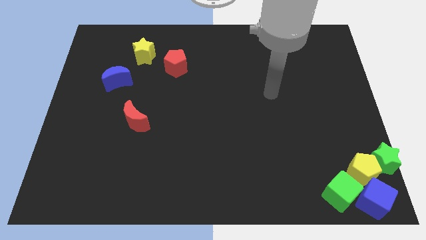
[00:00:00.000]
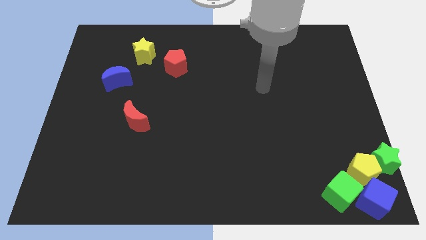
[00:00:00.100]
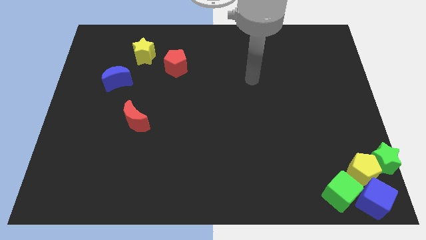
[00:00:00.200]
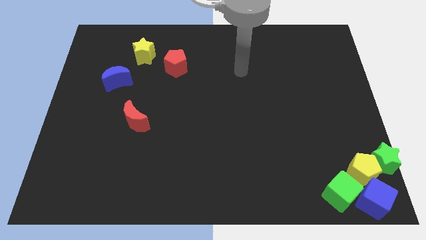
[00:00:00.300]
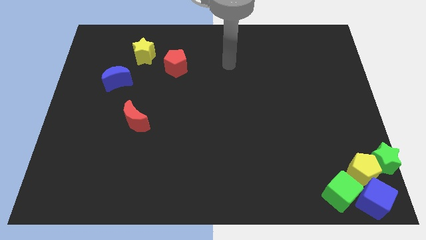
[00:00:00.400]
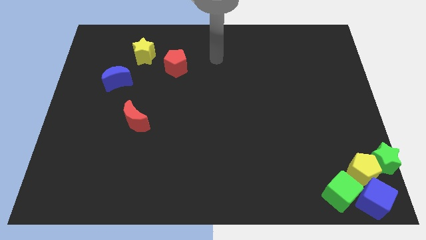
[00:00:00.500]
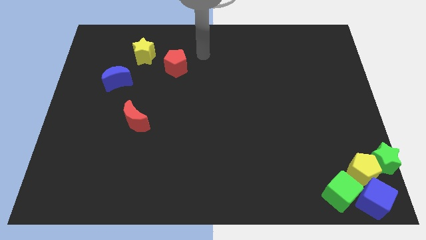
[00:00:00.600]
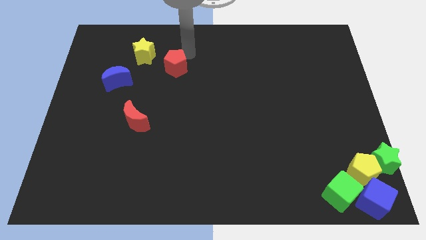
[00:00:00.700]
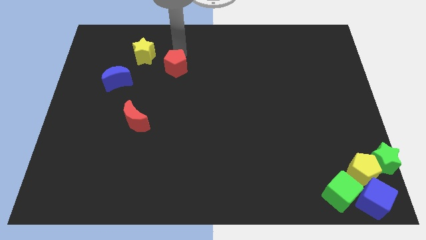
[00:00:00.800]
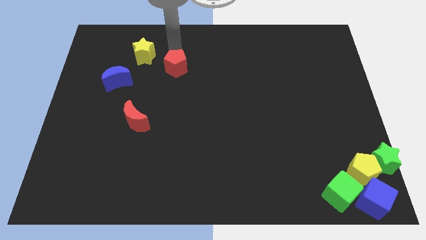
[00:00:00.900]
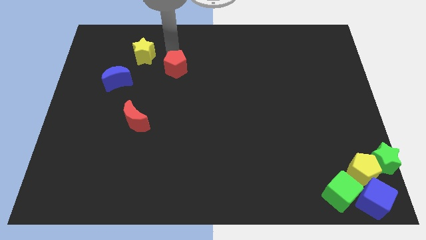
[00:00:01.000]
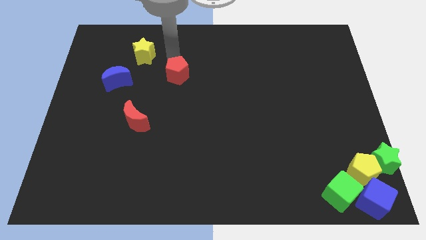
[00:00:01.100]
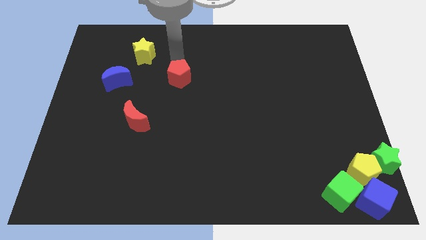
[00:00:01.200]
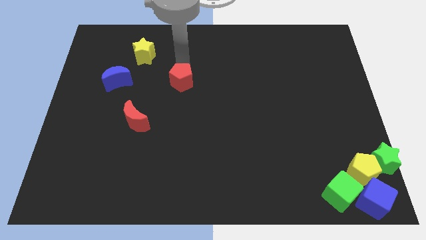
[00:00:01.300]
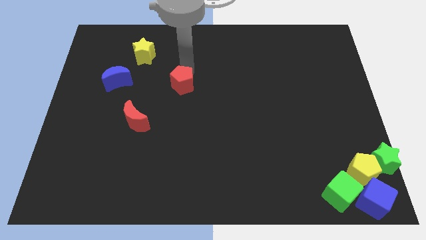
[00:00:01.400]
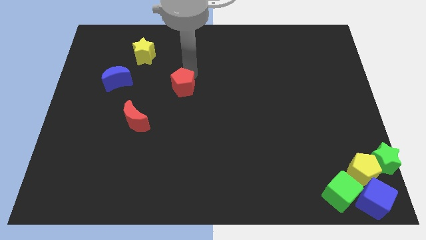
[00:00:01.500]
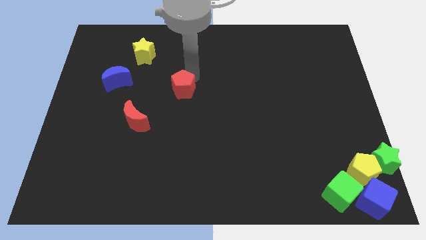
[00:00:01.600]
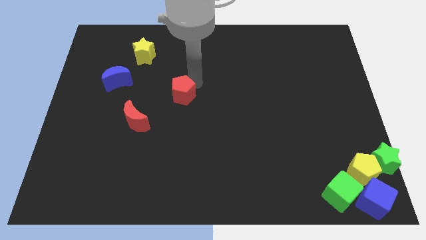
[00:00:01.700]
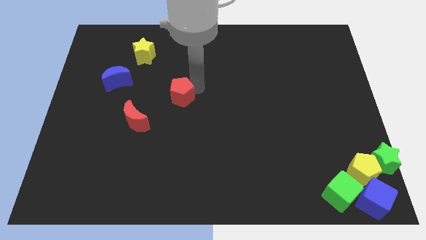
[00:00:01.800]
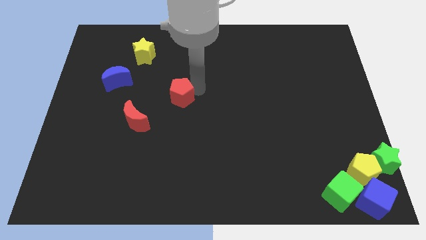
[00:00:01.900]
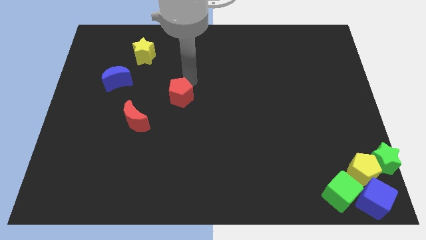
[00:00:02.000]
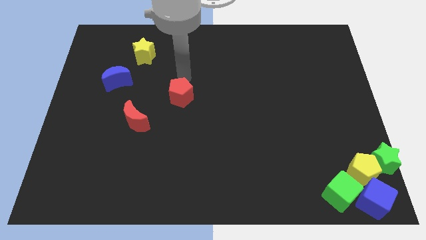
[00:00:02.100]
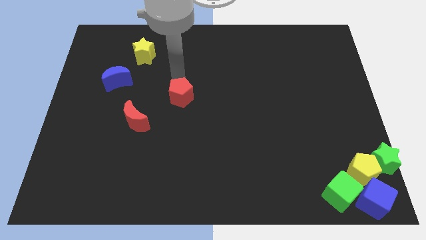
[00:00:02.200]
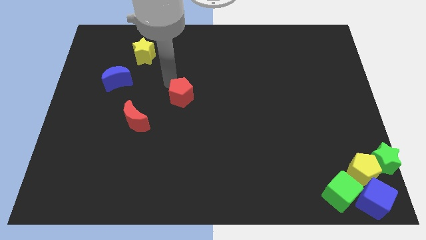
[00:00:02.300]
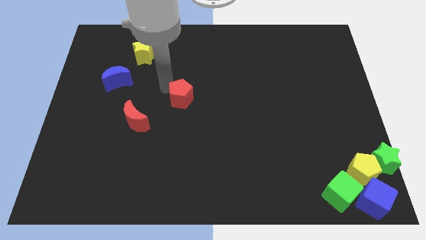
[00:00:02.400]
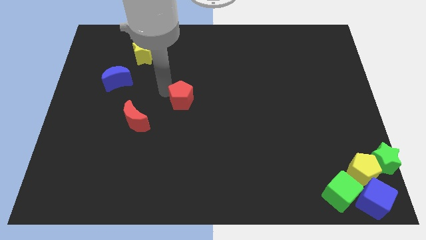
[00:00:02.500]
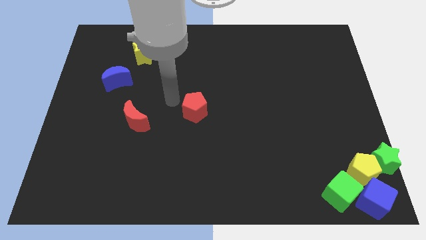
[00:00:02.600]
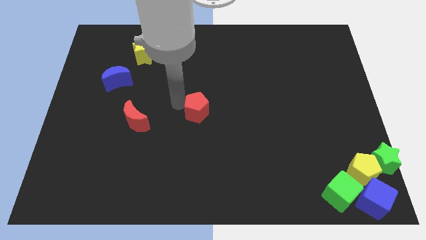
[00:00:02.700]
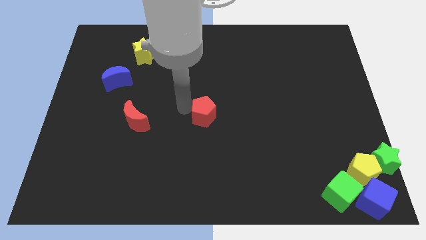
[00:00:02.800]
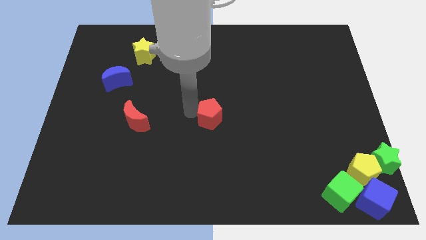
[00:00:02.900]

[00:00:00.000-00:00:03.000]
move the red pentagon to the horizontal right side of the red moon

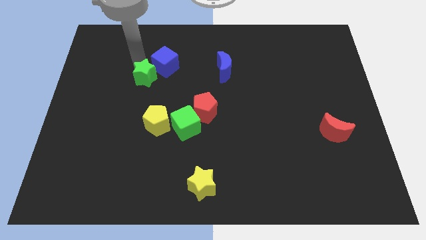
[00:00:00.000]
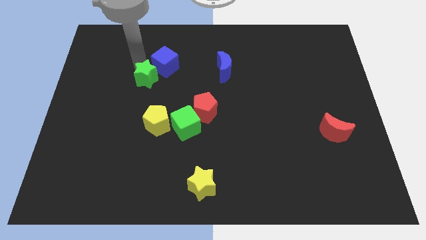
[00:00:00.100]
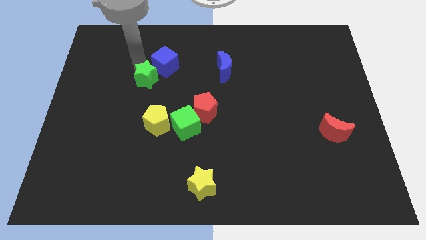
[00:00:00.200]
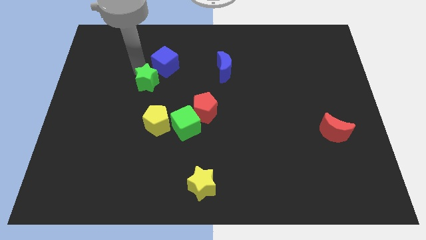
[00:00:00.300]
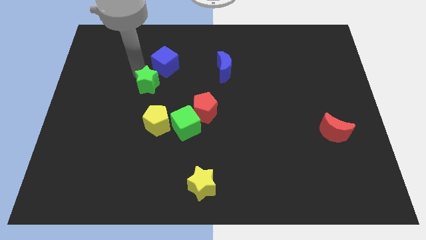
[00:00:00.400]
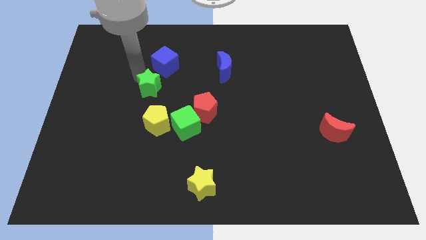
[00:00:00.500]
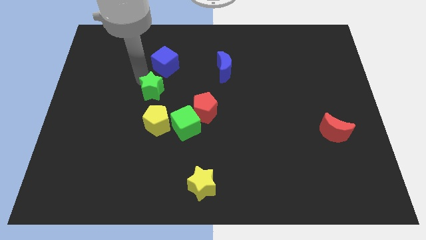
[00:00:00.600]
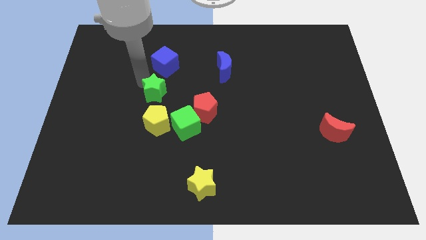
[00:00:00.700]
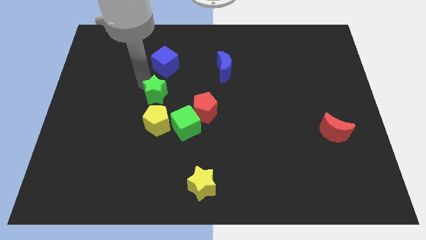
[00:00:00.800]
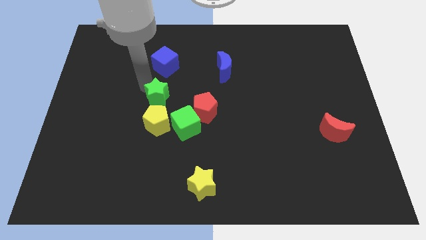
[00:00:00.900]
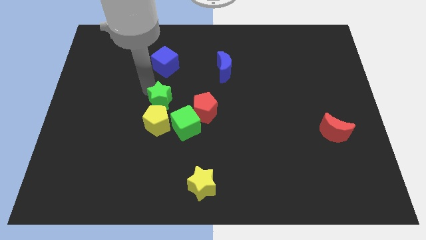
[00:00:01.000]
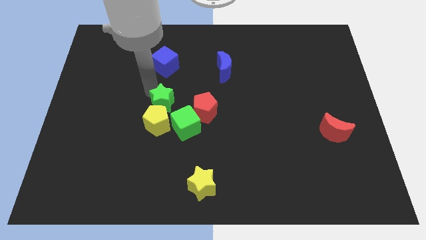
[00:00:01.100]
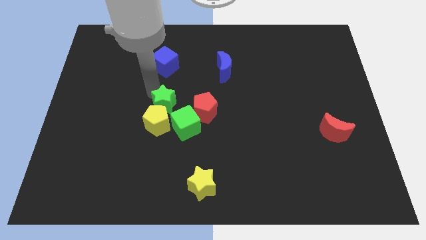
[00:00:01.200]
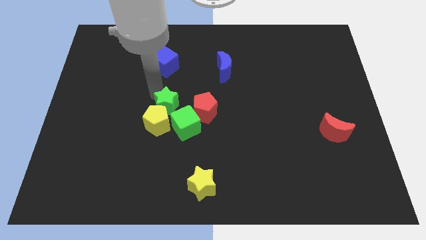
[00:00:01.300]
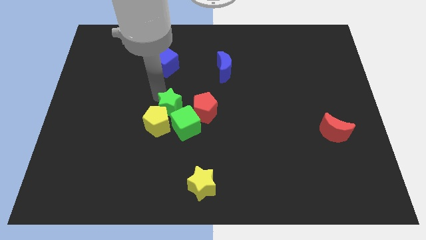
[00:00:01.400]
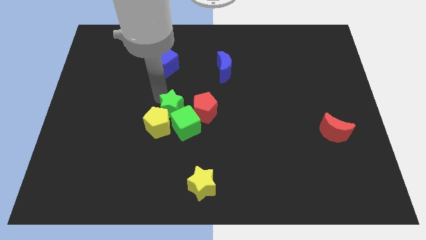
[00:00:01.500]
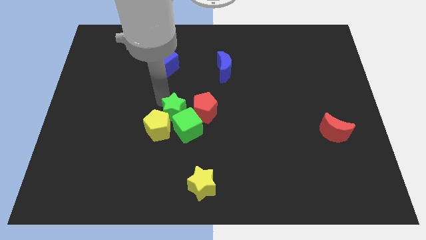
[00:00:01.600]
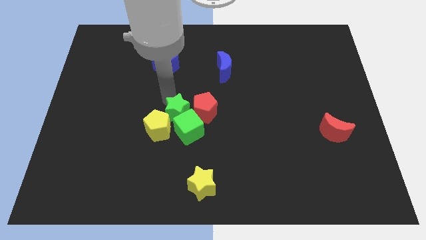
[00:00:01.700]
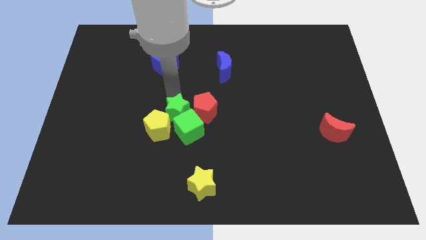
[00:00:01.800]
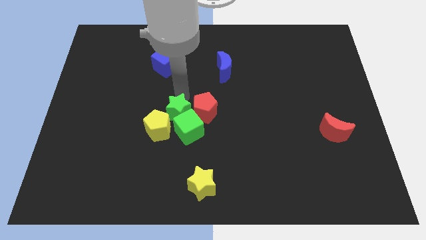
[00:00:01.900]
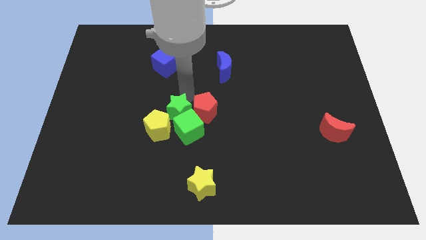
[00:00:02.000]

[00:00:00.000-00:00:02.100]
slide green star into green cube

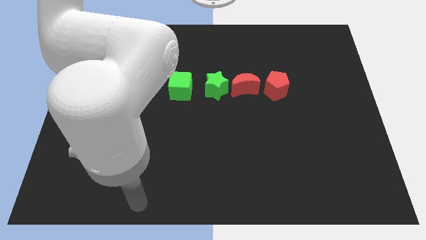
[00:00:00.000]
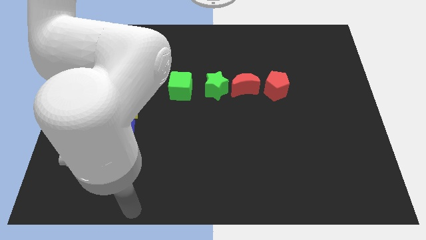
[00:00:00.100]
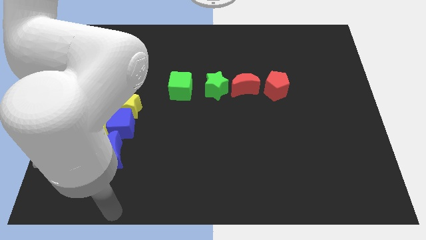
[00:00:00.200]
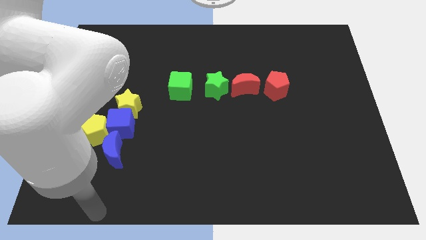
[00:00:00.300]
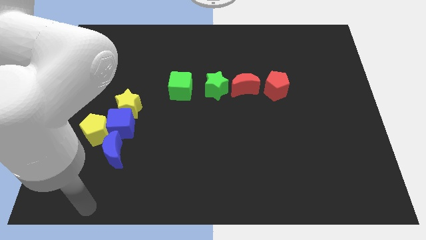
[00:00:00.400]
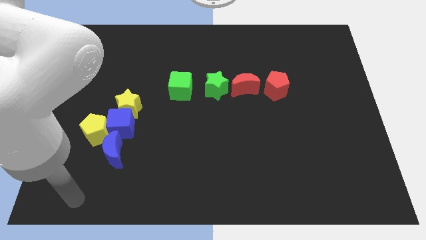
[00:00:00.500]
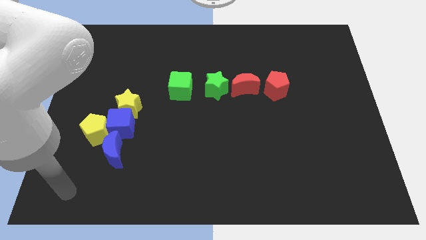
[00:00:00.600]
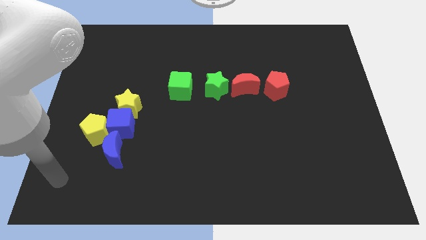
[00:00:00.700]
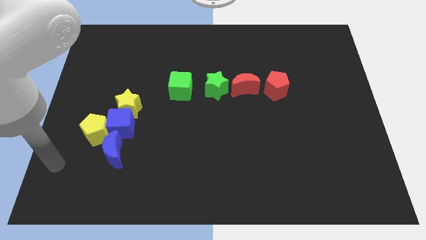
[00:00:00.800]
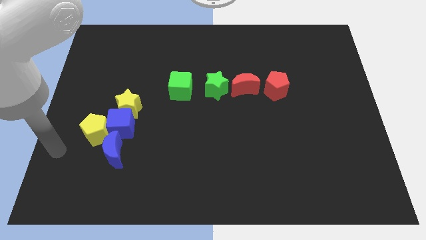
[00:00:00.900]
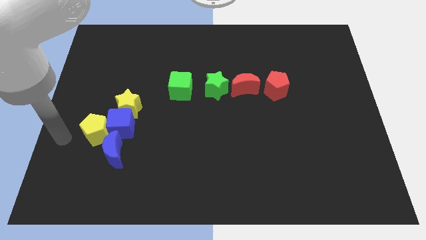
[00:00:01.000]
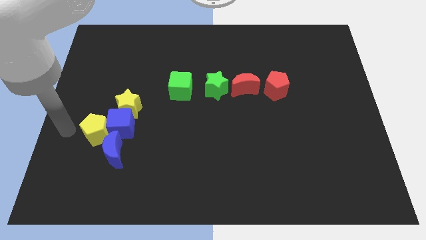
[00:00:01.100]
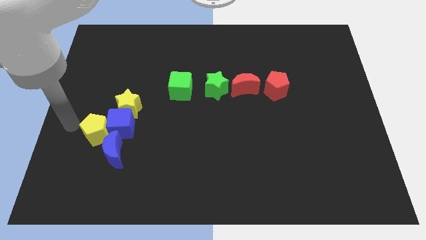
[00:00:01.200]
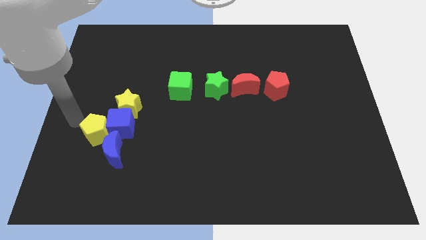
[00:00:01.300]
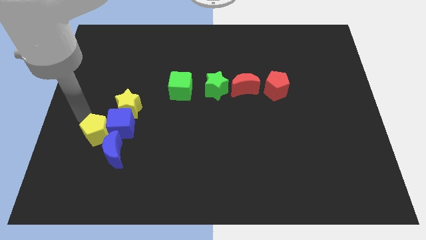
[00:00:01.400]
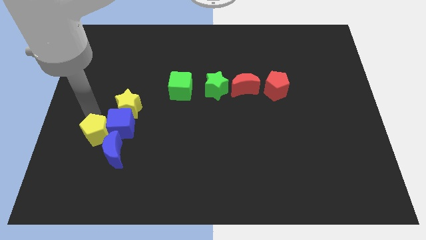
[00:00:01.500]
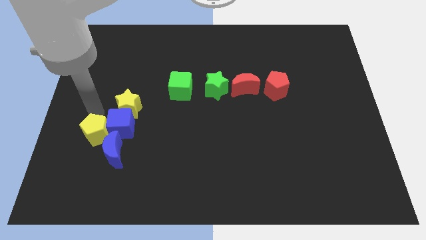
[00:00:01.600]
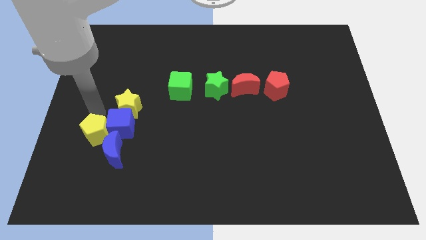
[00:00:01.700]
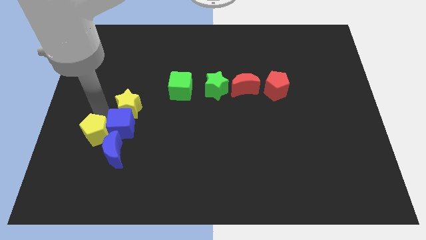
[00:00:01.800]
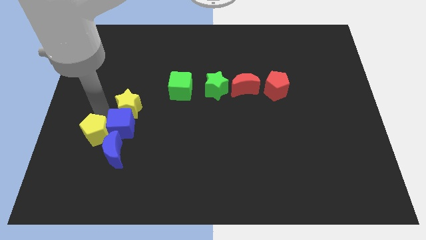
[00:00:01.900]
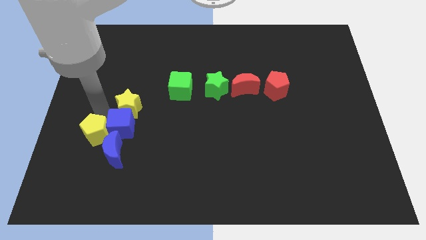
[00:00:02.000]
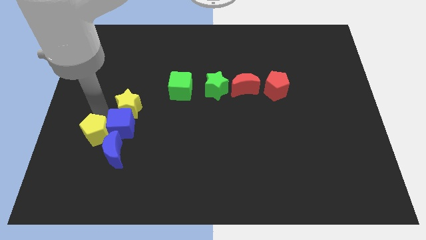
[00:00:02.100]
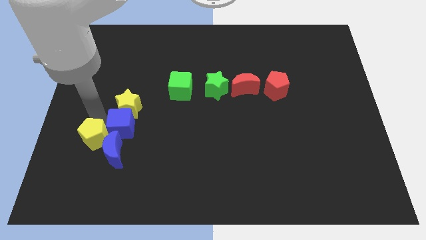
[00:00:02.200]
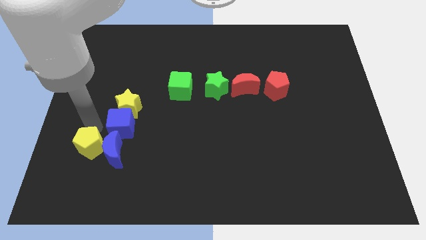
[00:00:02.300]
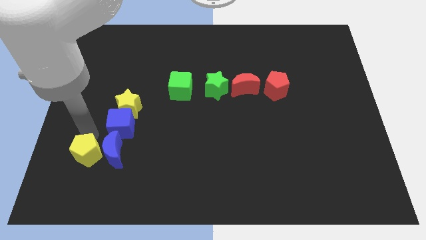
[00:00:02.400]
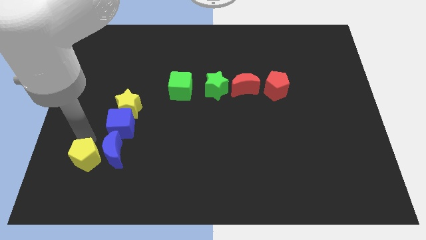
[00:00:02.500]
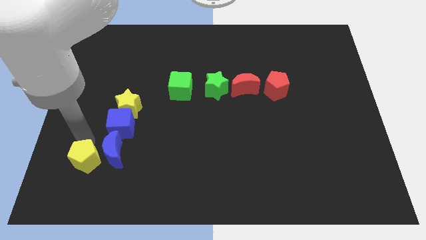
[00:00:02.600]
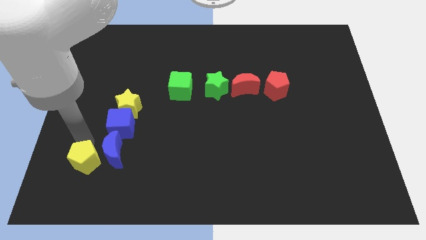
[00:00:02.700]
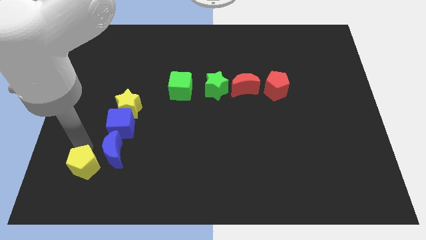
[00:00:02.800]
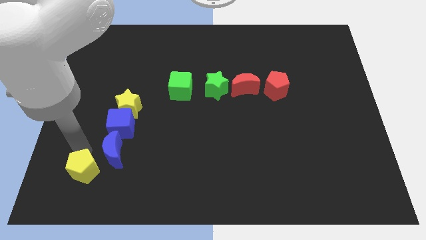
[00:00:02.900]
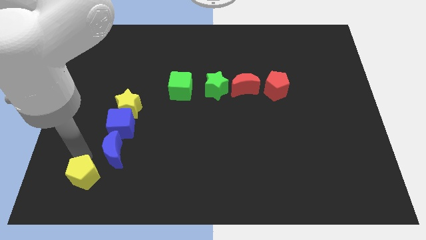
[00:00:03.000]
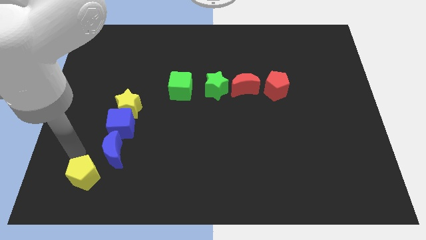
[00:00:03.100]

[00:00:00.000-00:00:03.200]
move the yellow pentagon away from the blue cube

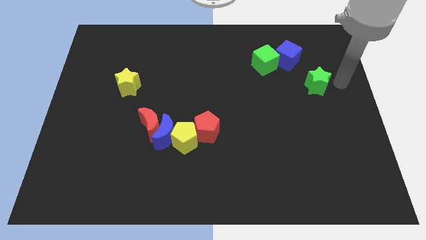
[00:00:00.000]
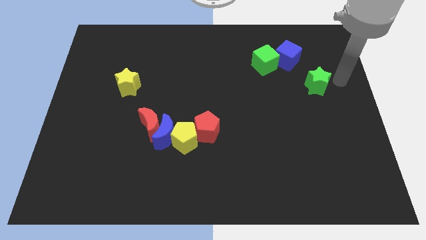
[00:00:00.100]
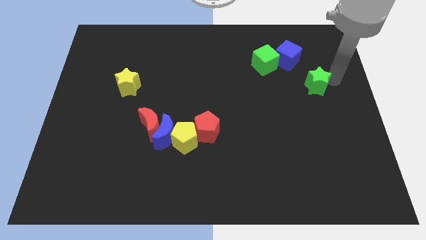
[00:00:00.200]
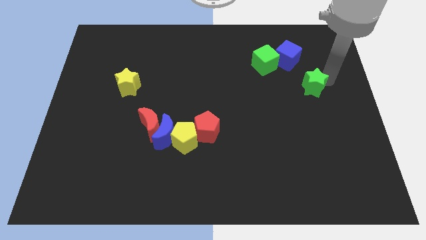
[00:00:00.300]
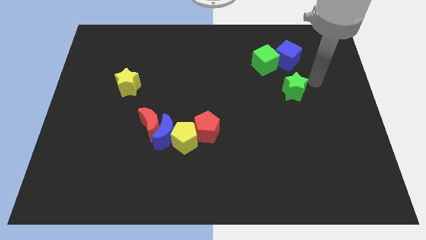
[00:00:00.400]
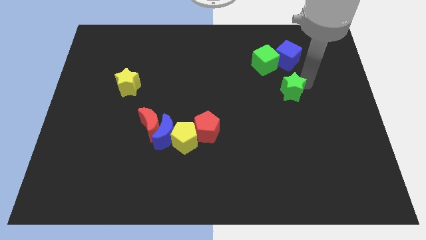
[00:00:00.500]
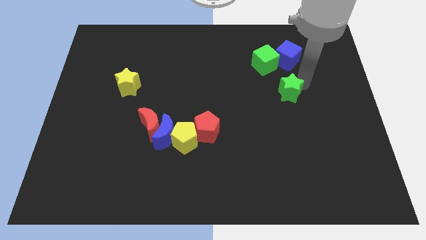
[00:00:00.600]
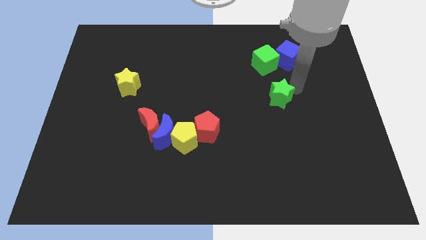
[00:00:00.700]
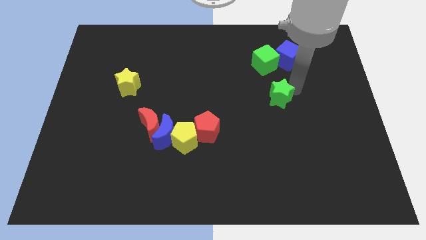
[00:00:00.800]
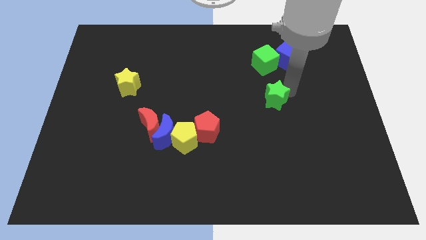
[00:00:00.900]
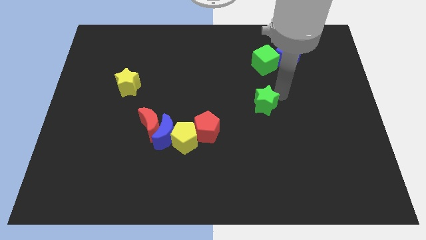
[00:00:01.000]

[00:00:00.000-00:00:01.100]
place green star to the bottom of green cube
